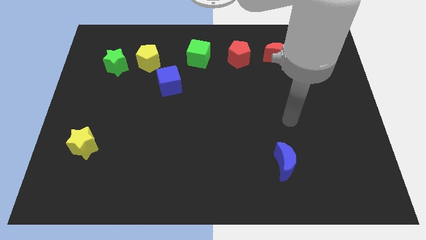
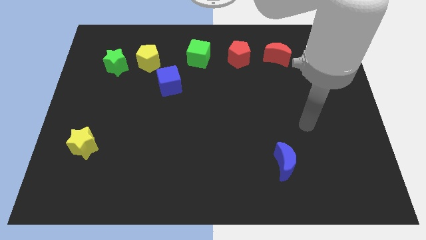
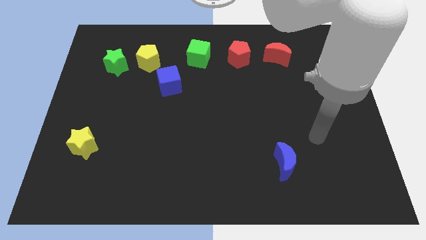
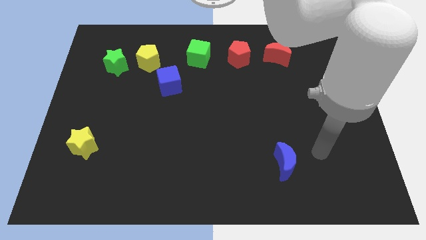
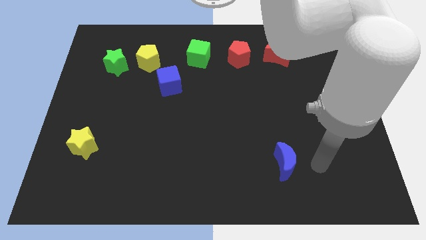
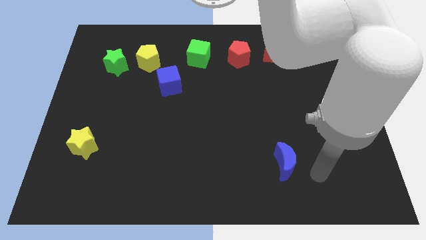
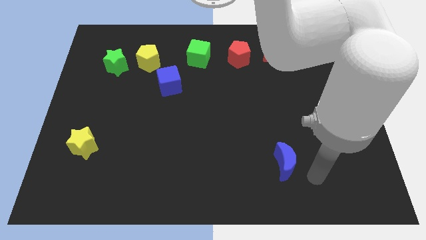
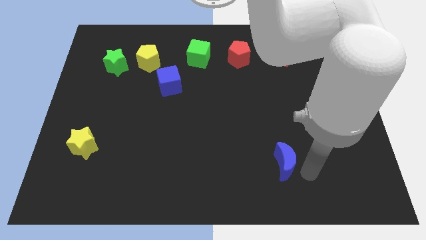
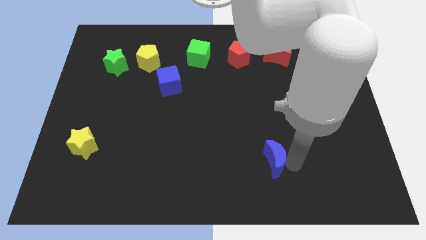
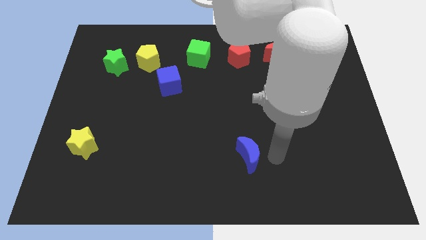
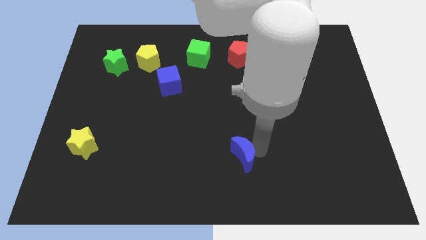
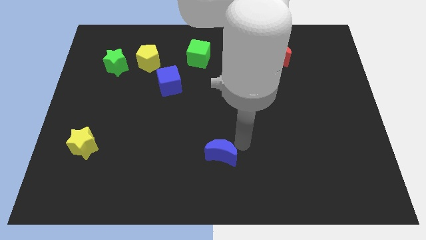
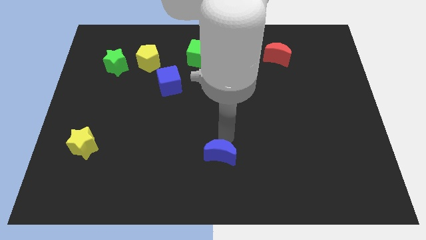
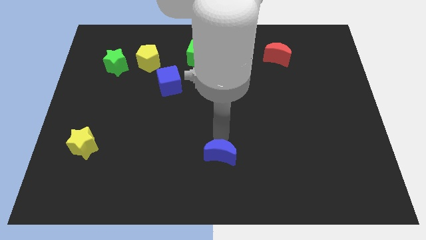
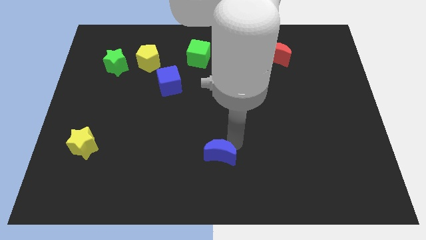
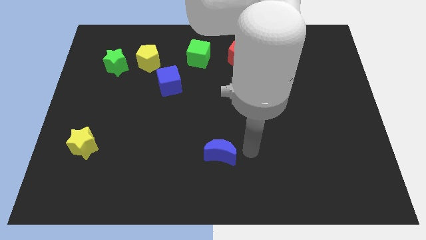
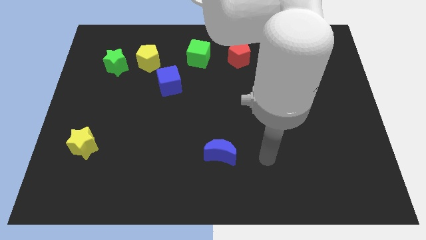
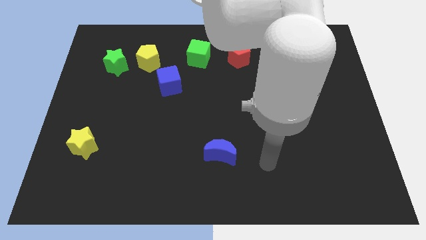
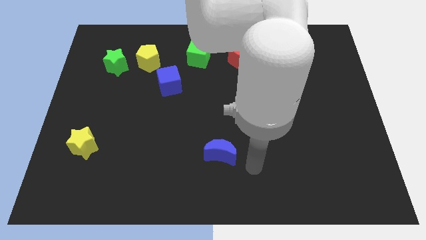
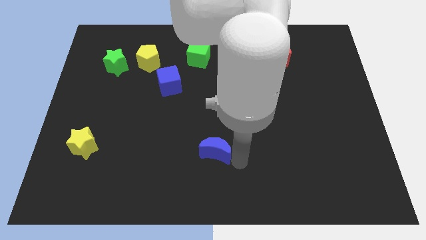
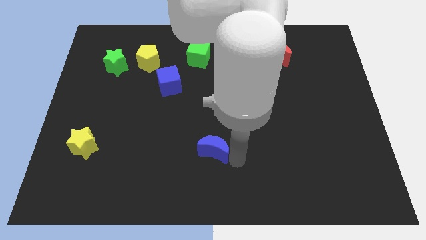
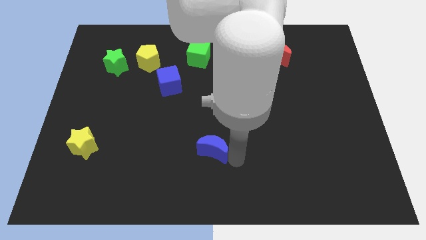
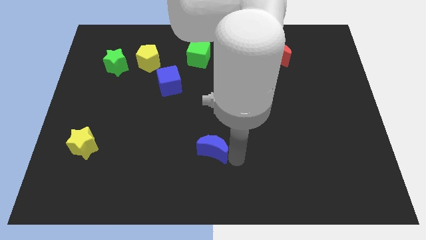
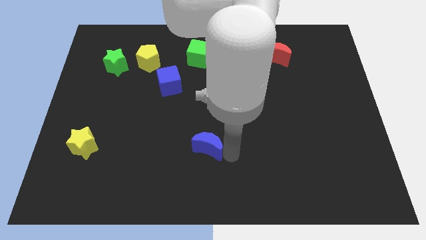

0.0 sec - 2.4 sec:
place the blue moon below the green cube

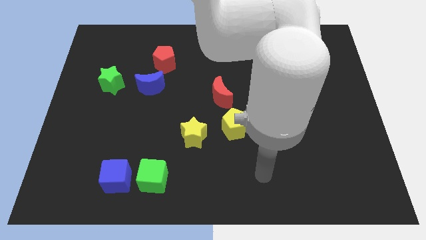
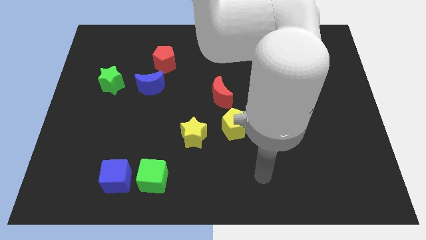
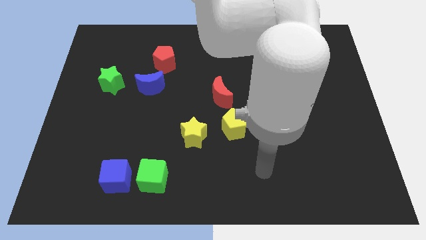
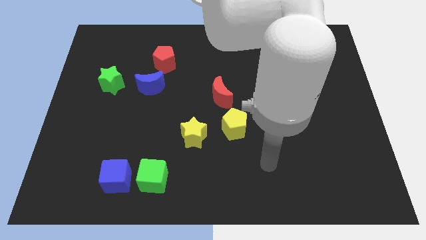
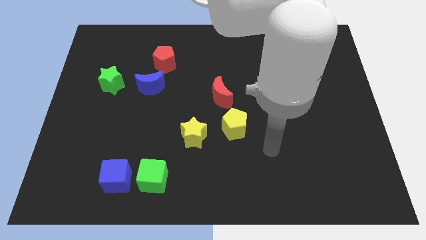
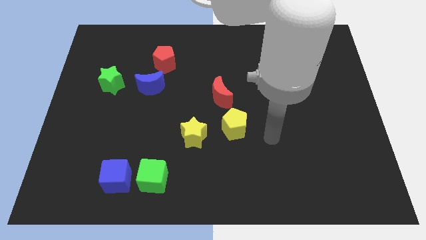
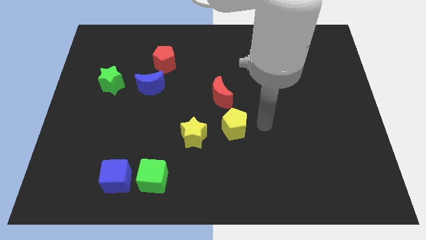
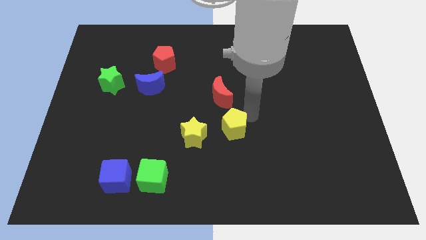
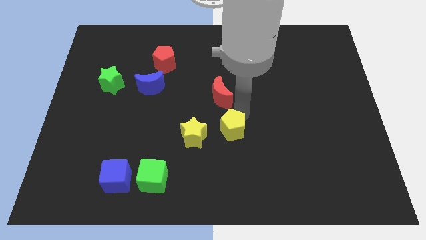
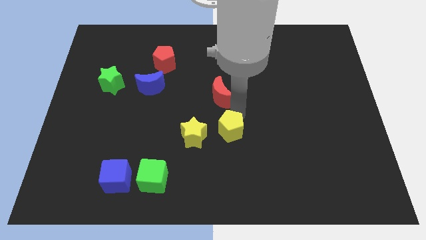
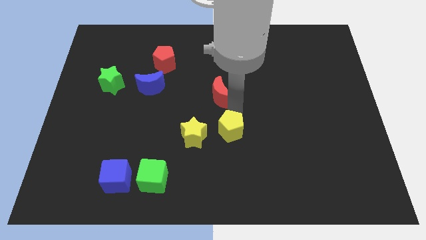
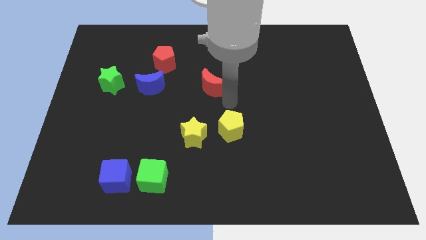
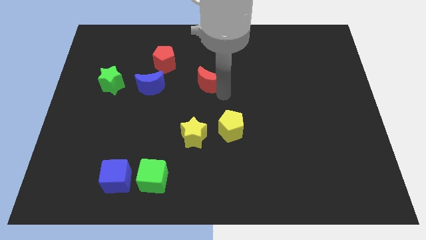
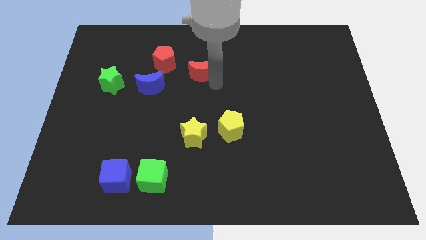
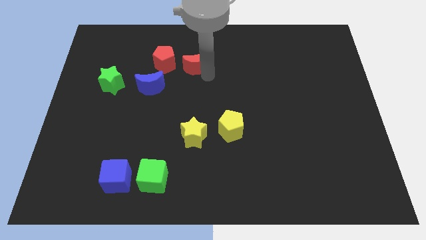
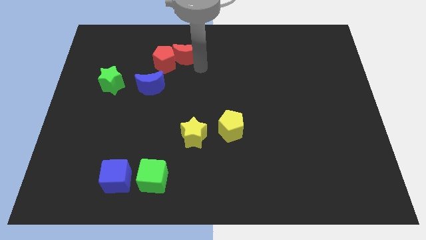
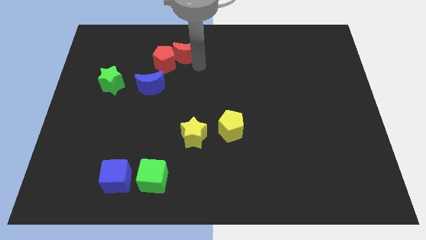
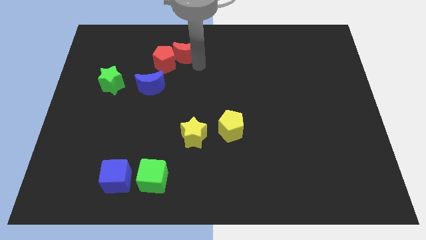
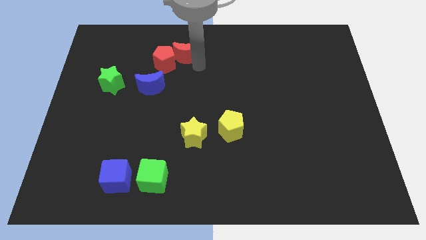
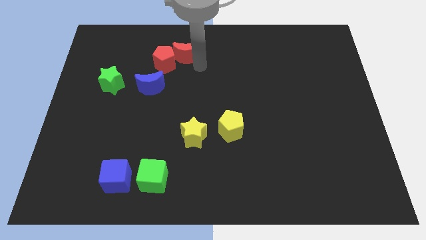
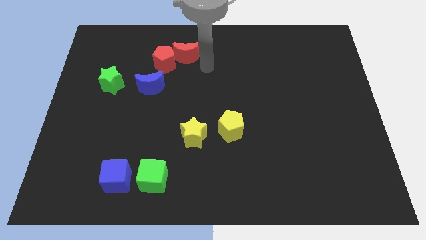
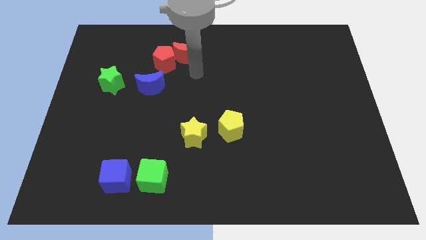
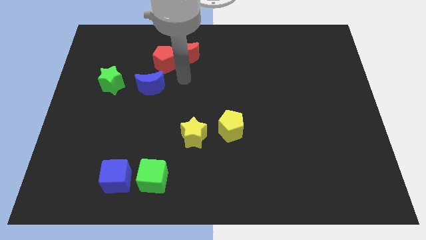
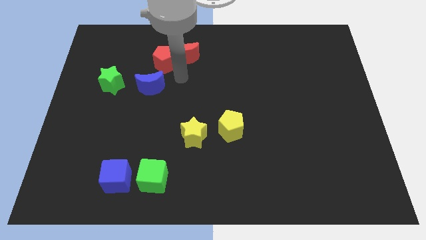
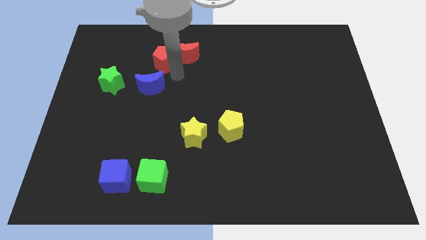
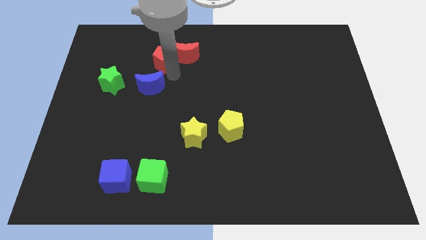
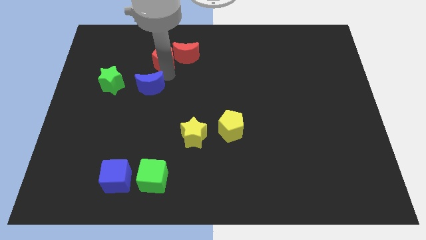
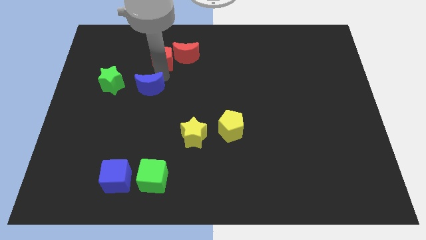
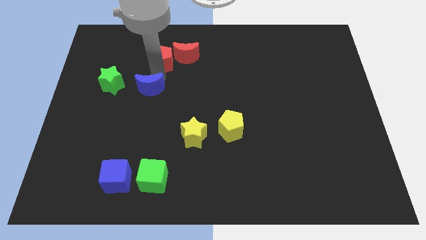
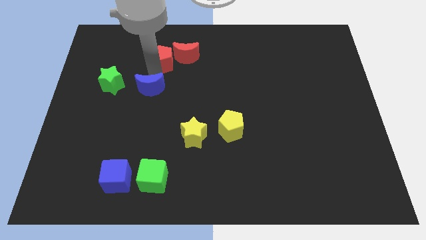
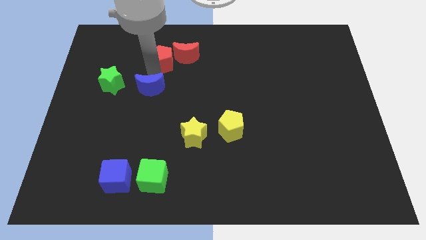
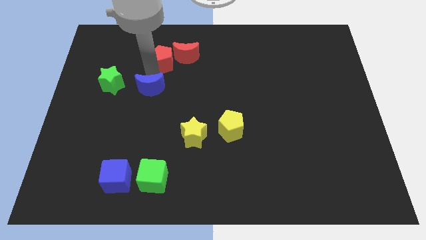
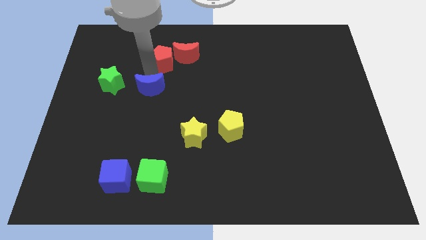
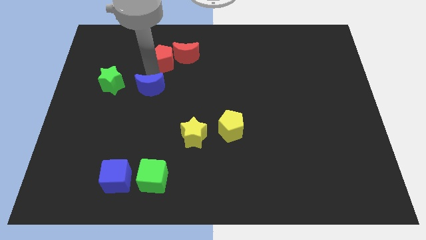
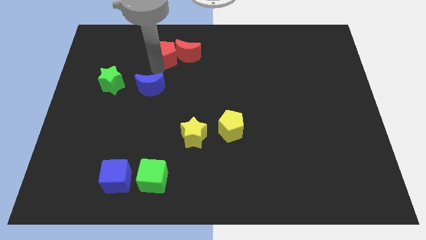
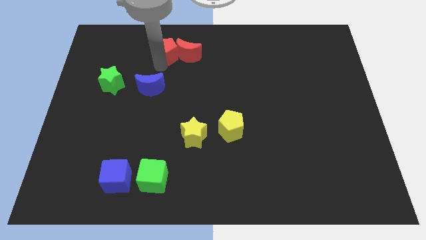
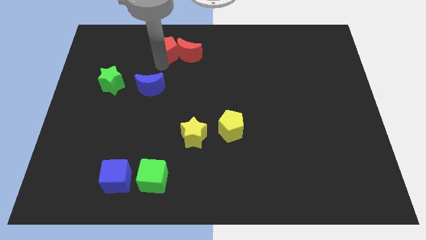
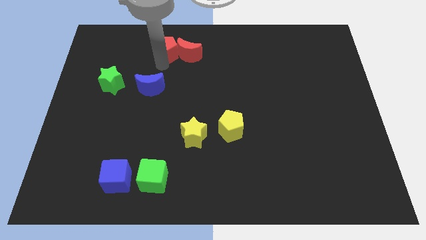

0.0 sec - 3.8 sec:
slide the red crescent and the red pentagon towards top

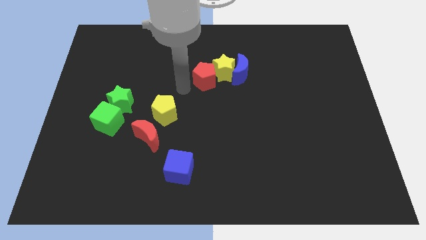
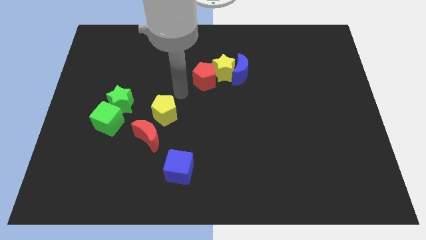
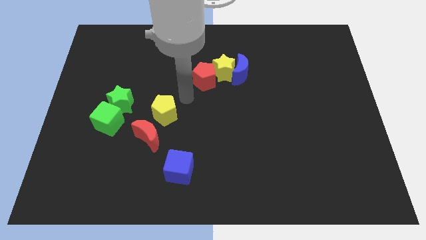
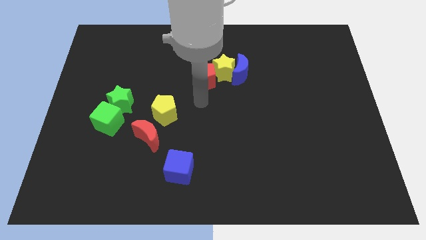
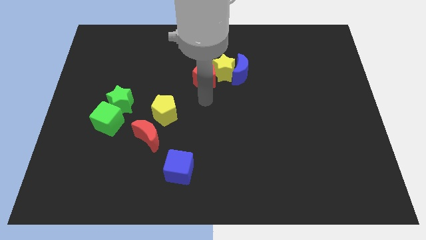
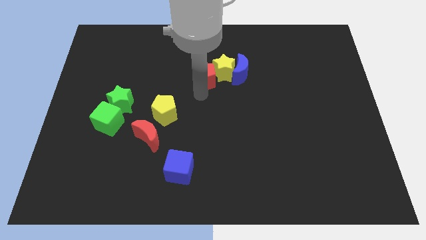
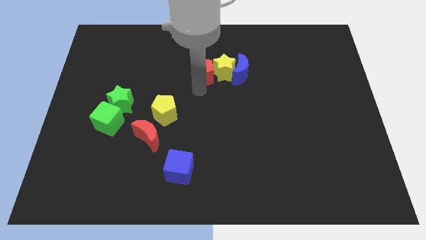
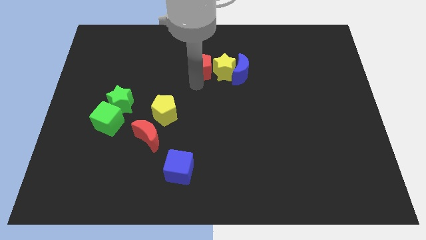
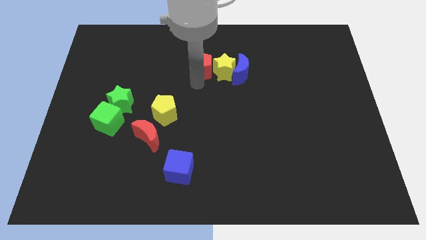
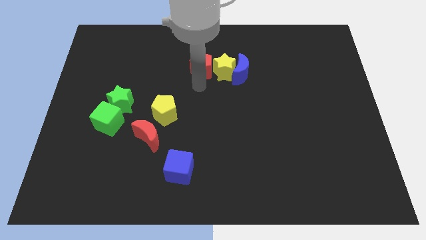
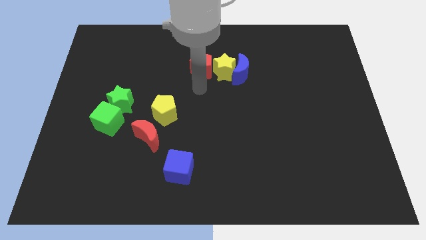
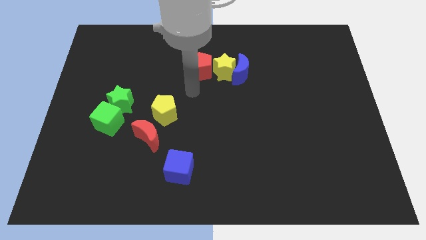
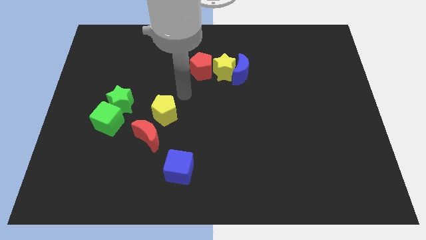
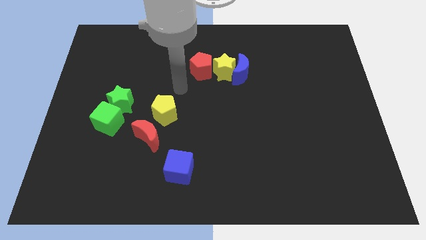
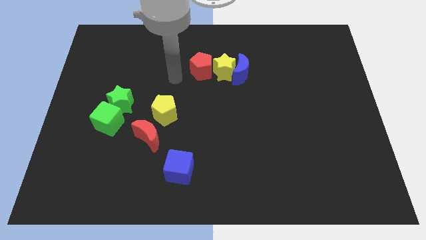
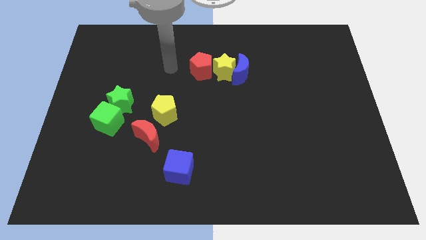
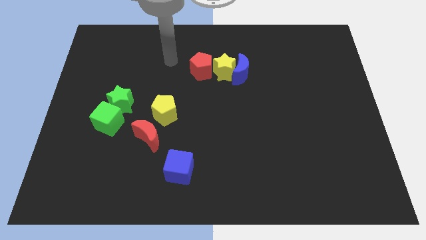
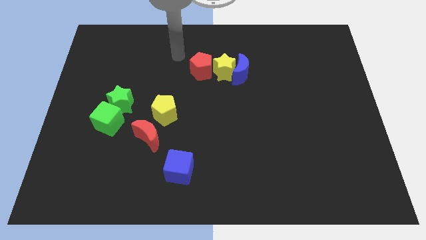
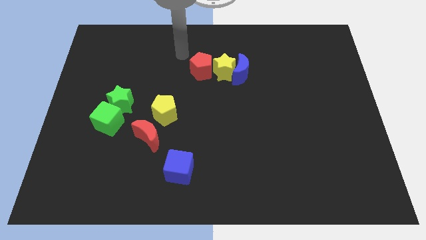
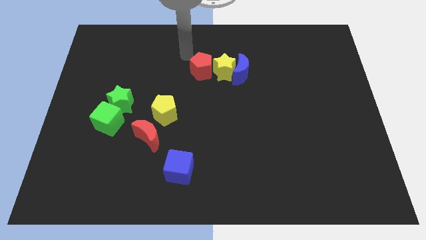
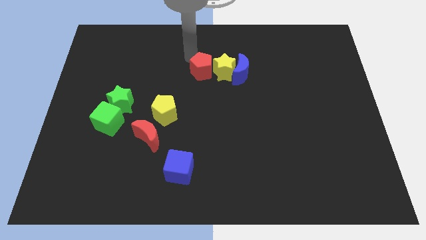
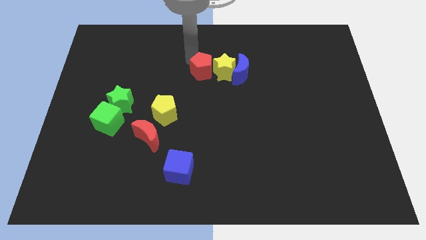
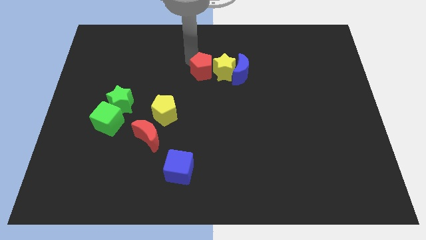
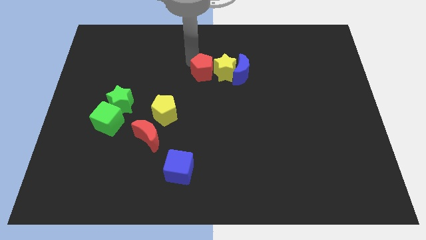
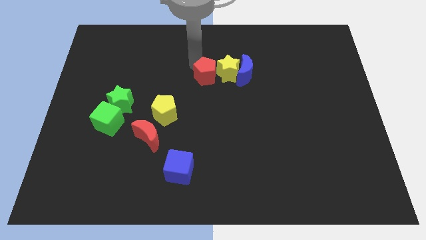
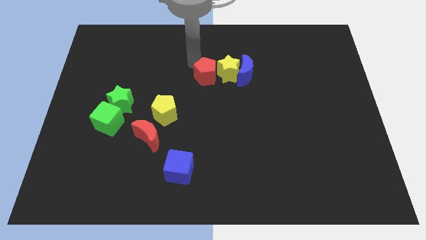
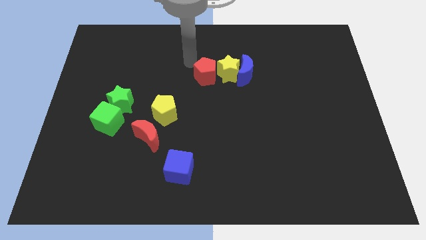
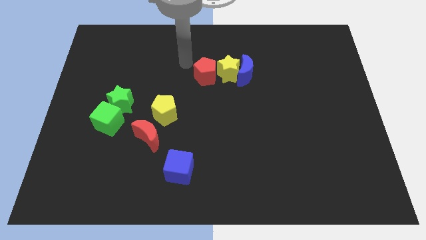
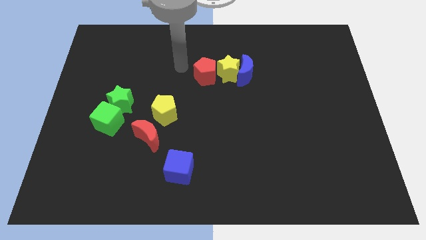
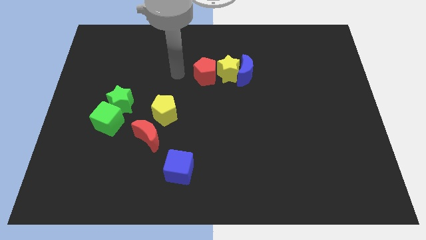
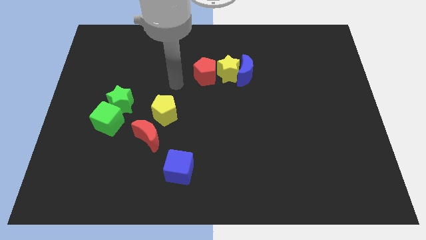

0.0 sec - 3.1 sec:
move the arm between re pentagon and yellow pentagon
